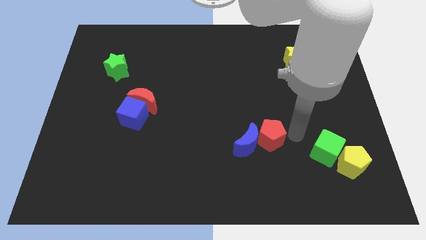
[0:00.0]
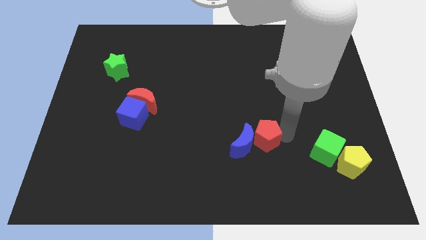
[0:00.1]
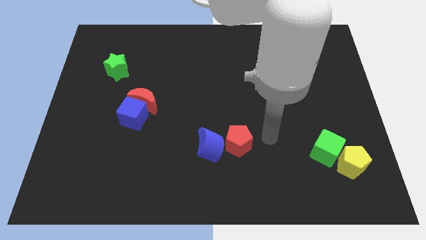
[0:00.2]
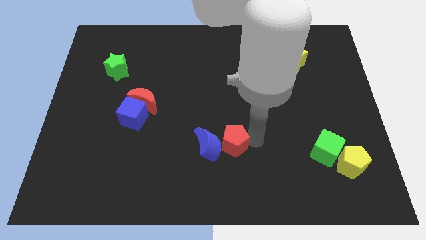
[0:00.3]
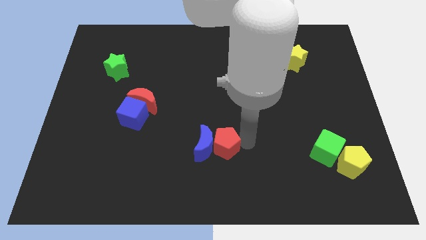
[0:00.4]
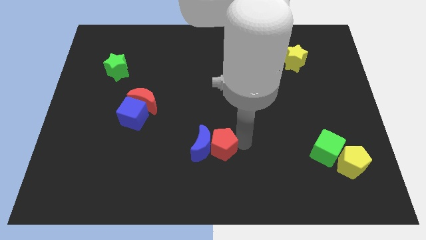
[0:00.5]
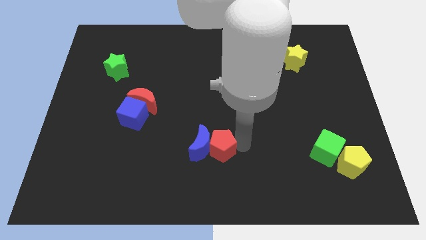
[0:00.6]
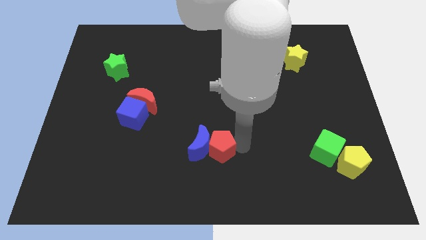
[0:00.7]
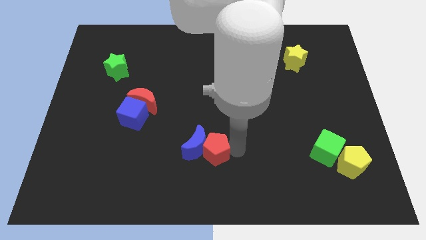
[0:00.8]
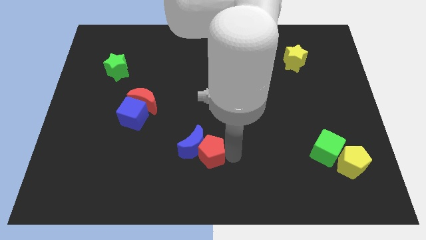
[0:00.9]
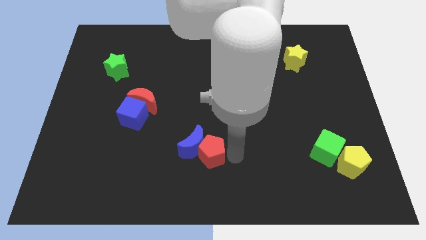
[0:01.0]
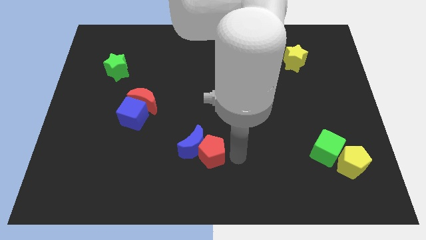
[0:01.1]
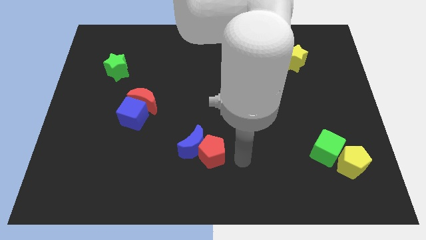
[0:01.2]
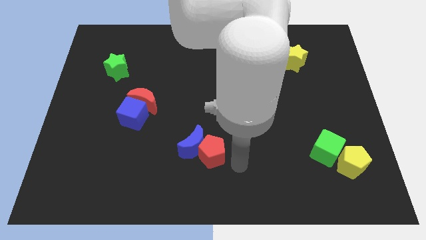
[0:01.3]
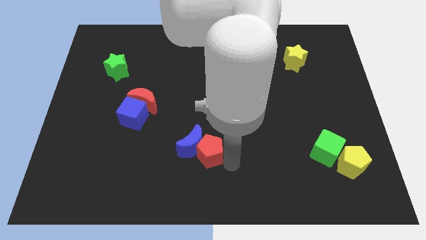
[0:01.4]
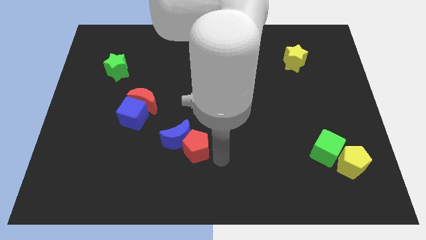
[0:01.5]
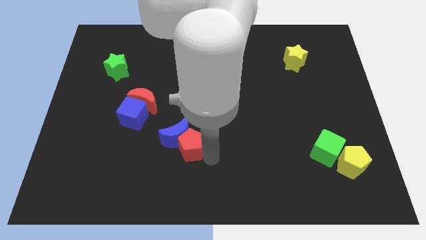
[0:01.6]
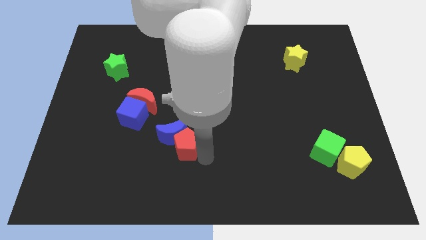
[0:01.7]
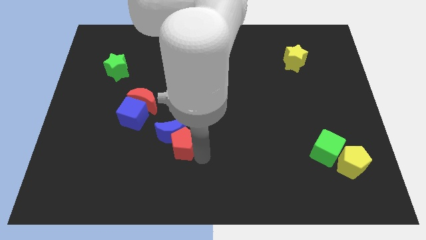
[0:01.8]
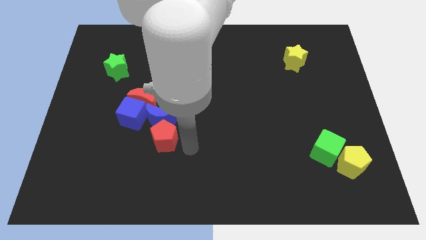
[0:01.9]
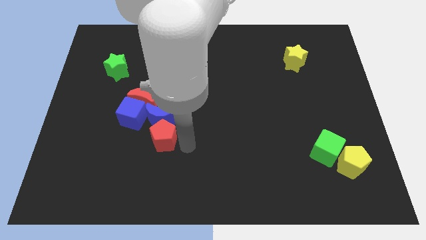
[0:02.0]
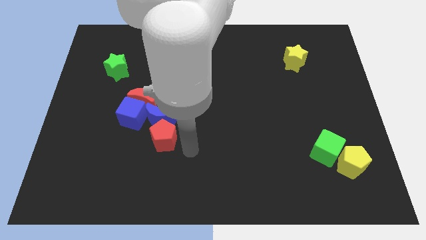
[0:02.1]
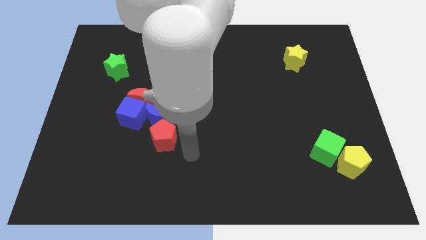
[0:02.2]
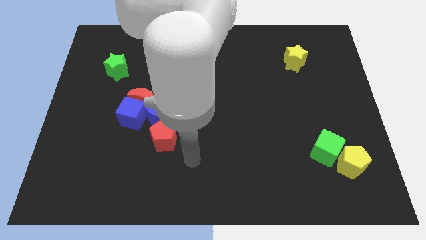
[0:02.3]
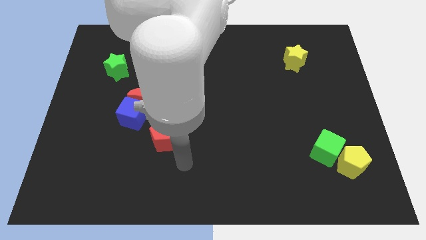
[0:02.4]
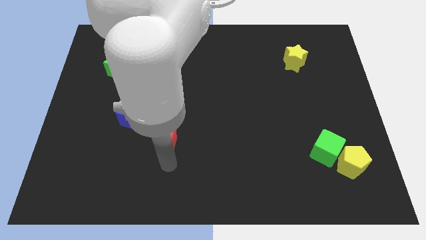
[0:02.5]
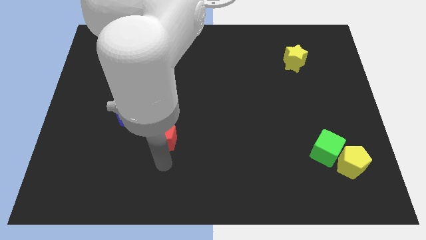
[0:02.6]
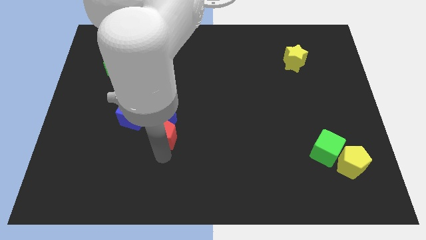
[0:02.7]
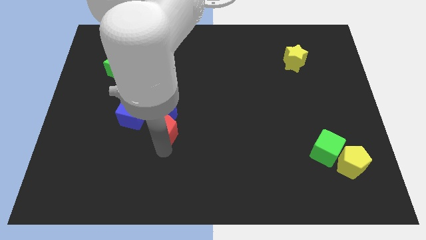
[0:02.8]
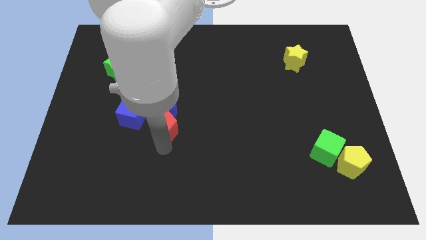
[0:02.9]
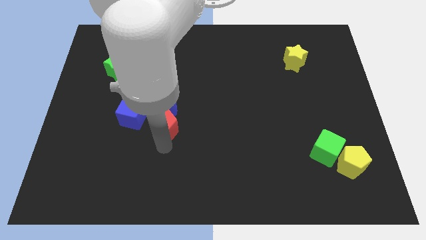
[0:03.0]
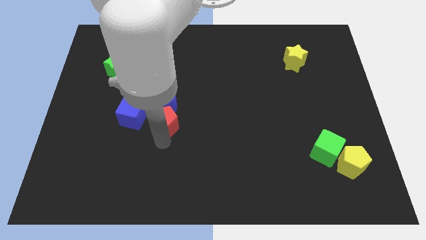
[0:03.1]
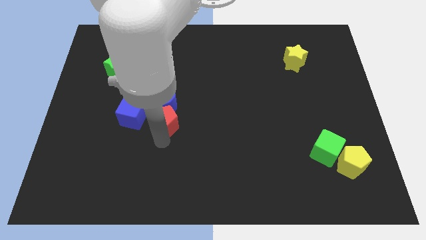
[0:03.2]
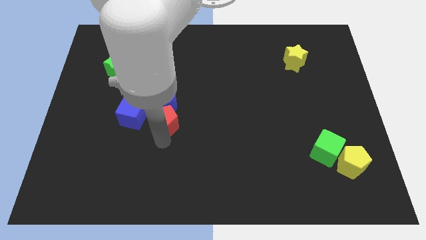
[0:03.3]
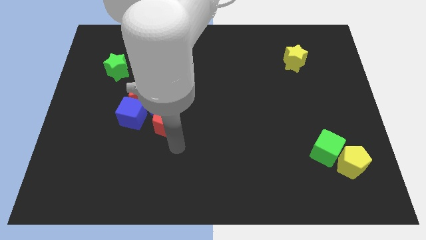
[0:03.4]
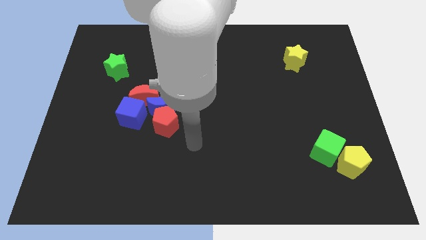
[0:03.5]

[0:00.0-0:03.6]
move the red pentagon with the blue crescent towards the blue cube

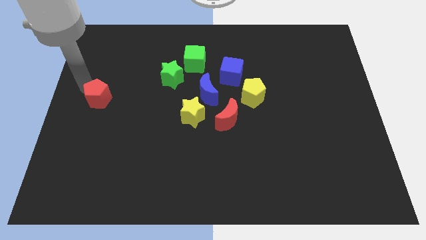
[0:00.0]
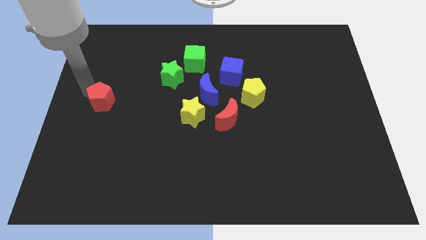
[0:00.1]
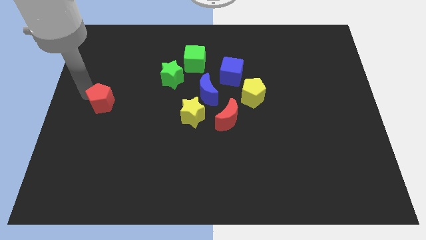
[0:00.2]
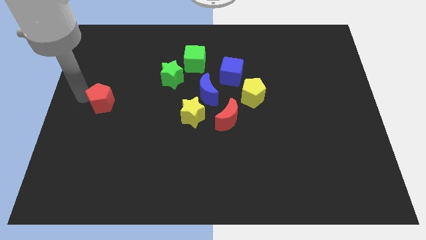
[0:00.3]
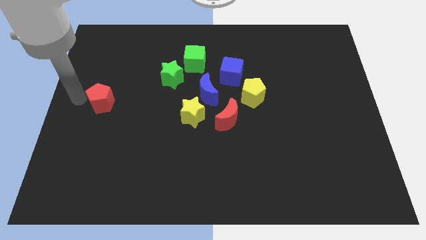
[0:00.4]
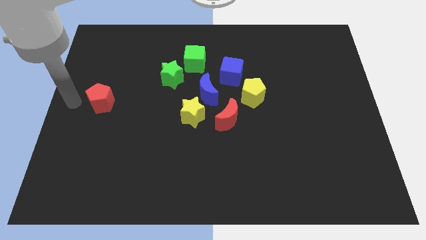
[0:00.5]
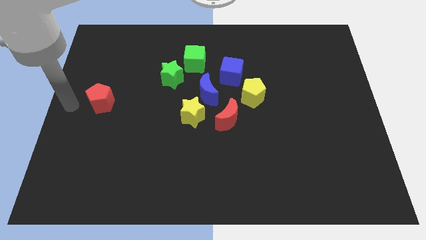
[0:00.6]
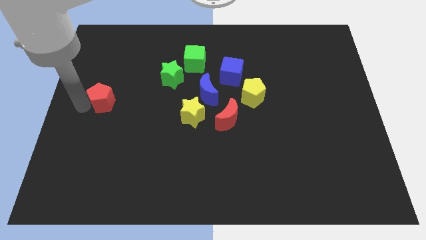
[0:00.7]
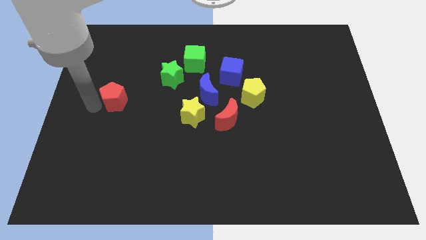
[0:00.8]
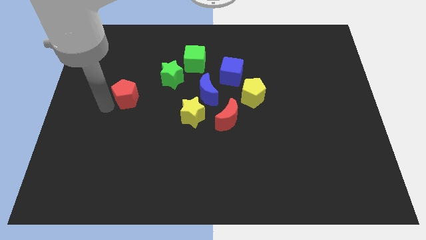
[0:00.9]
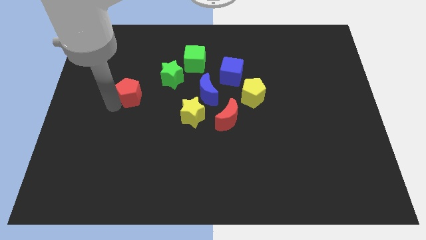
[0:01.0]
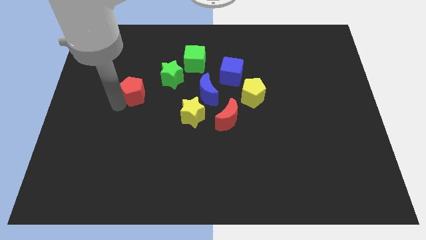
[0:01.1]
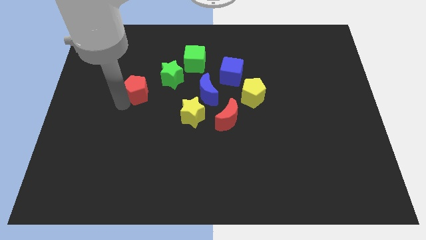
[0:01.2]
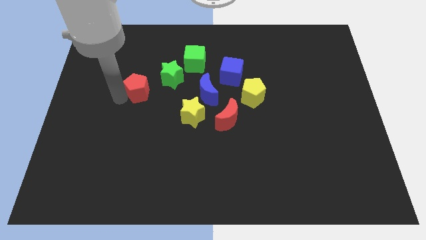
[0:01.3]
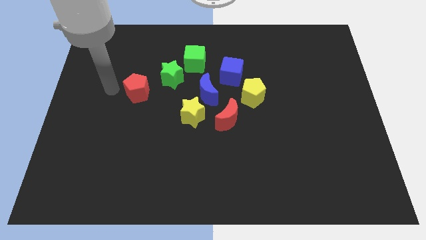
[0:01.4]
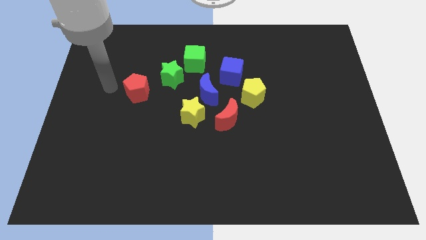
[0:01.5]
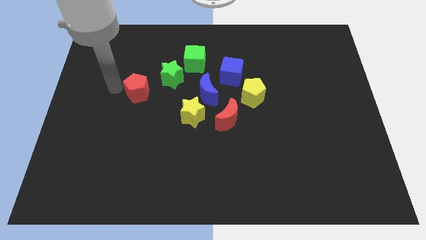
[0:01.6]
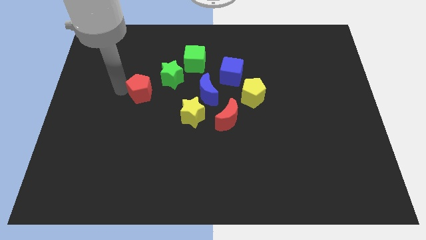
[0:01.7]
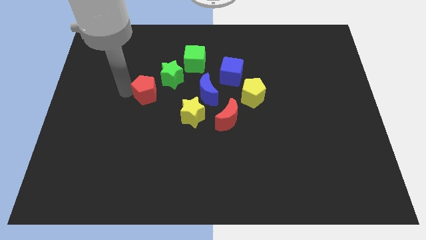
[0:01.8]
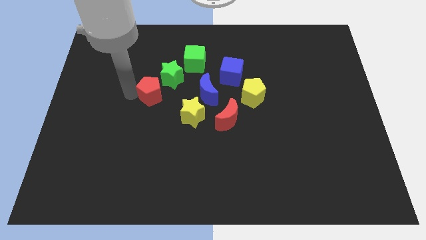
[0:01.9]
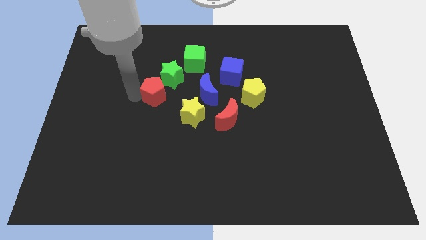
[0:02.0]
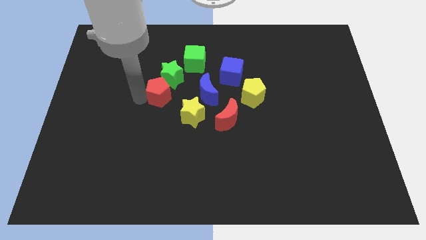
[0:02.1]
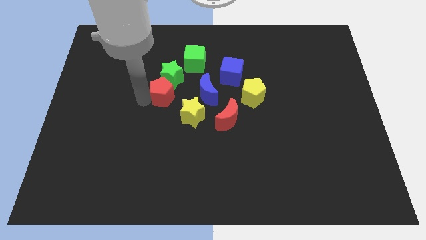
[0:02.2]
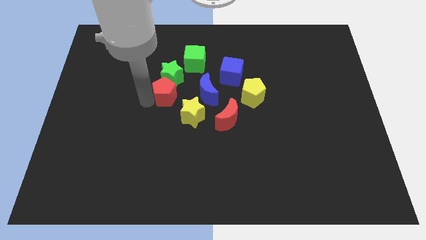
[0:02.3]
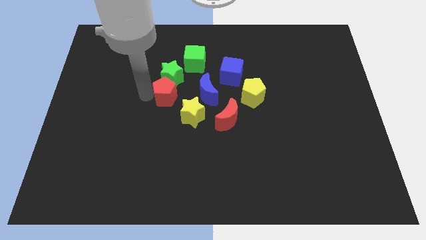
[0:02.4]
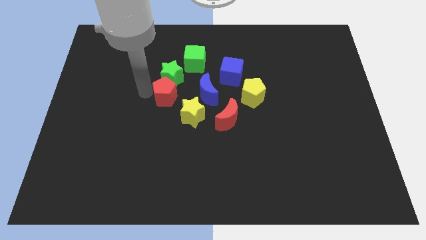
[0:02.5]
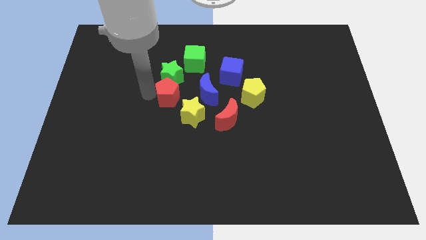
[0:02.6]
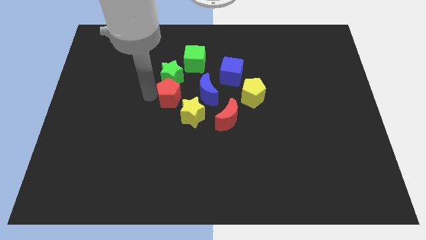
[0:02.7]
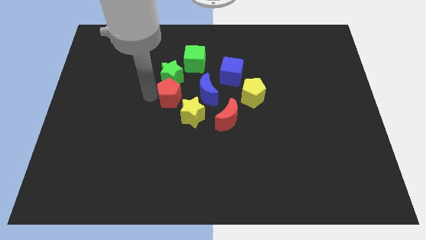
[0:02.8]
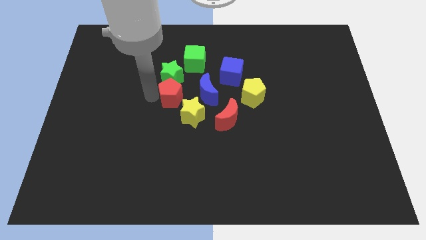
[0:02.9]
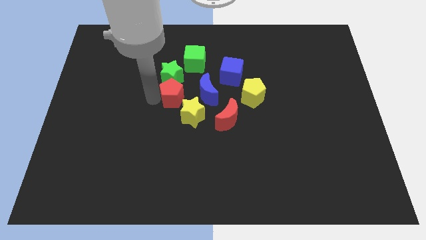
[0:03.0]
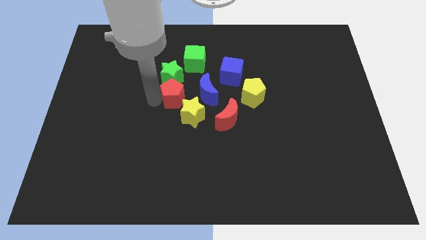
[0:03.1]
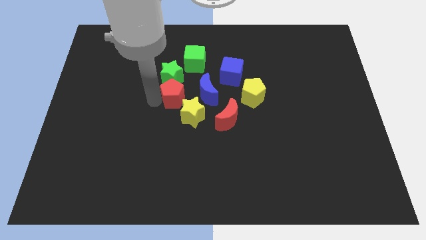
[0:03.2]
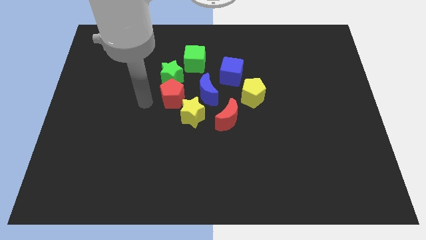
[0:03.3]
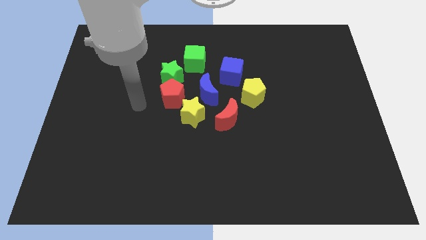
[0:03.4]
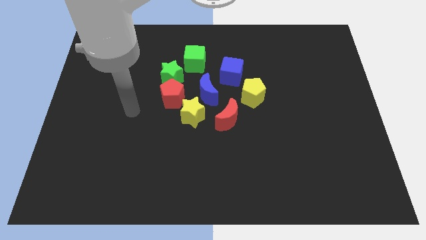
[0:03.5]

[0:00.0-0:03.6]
put the red pentagon below the green star

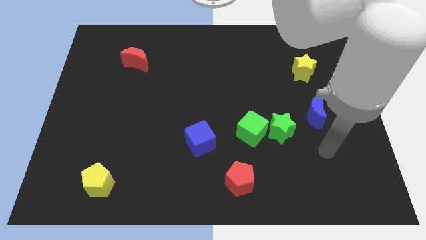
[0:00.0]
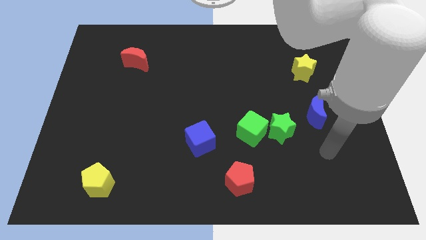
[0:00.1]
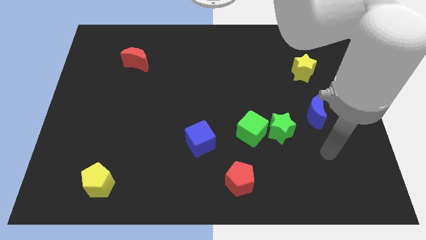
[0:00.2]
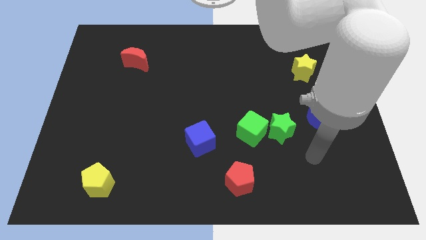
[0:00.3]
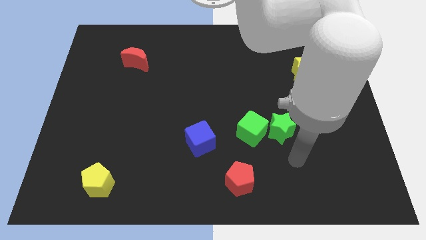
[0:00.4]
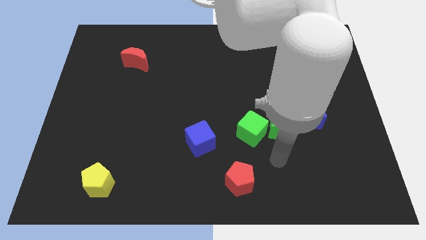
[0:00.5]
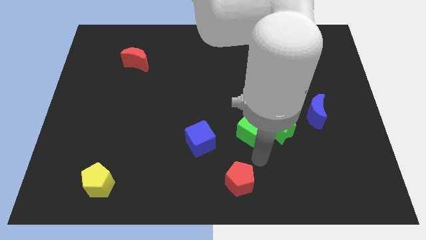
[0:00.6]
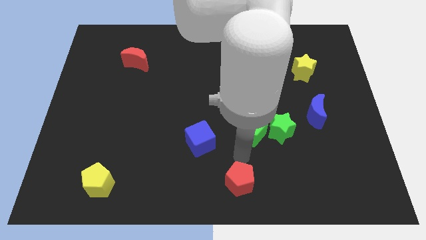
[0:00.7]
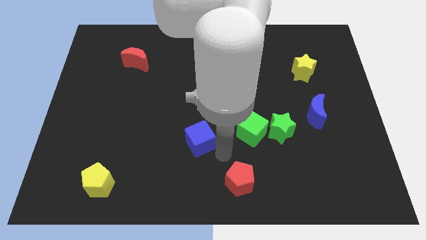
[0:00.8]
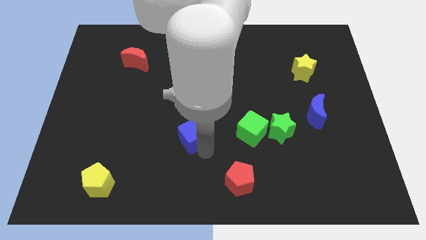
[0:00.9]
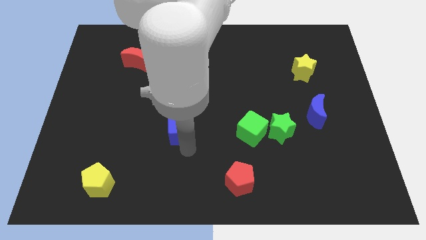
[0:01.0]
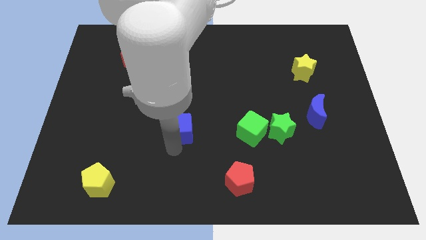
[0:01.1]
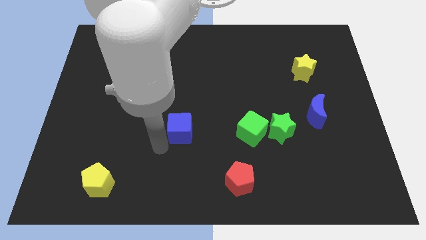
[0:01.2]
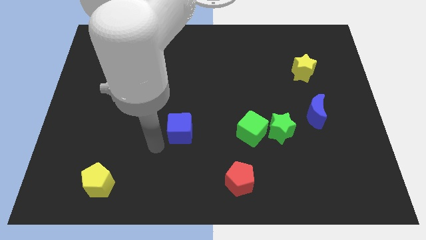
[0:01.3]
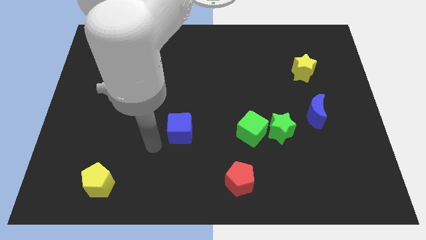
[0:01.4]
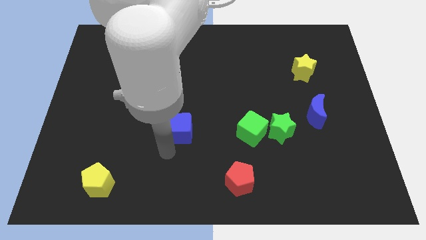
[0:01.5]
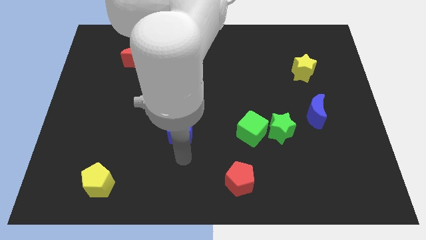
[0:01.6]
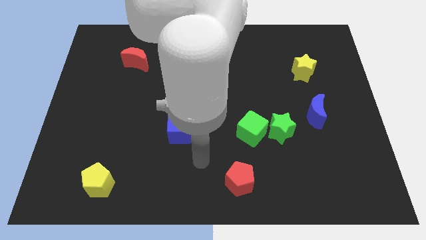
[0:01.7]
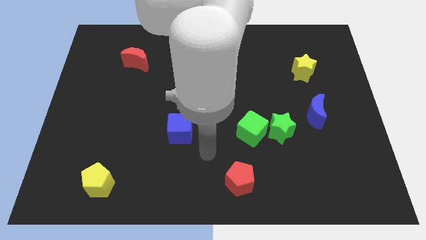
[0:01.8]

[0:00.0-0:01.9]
move the blue cube horizontally to the left side of the green cube
